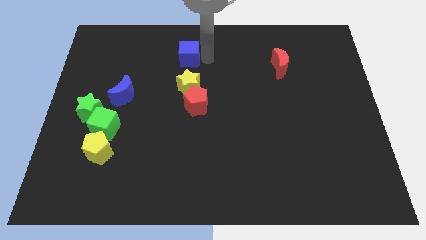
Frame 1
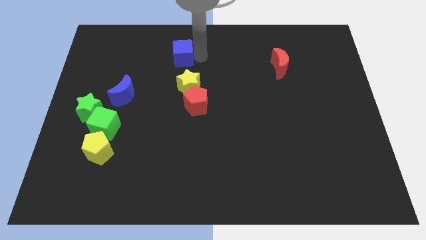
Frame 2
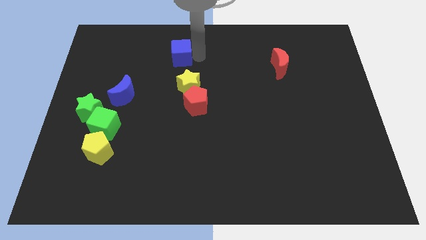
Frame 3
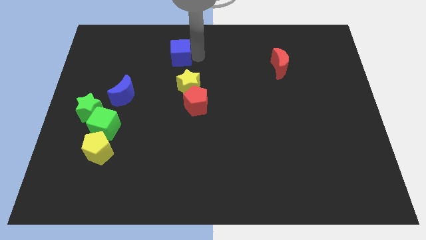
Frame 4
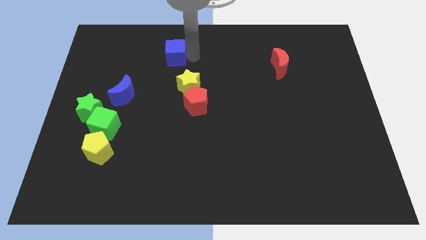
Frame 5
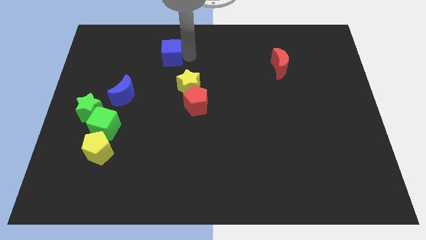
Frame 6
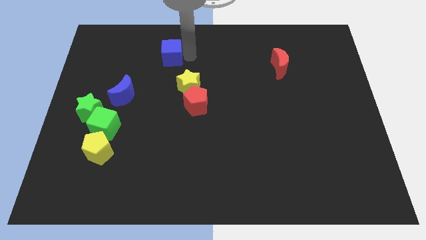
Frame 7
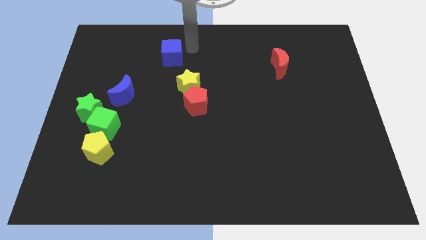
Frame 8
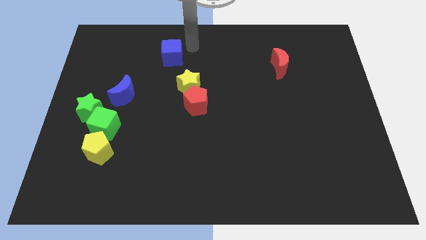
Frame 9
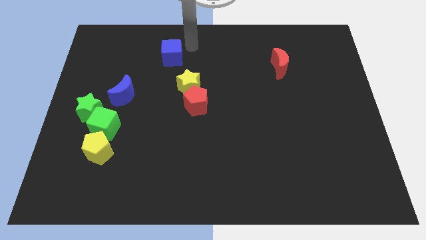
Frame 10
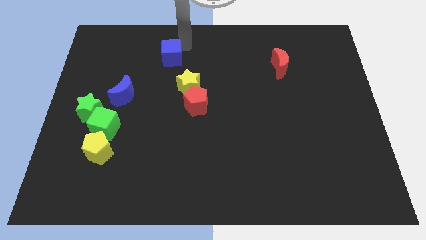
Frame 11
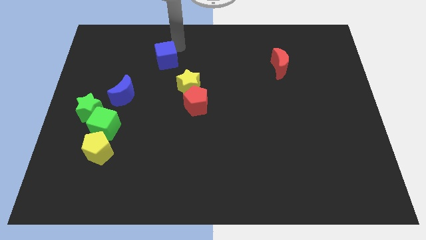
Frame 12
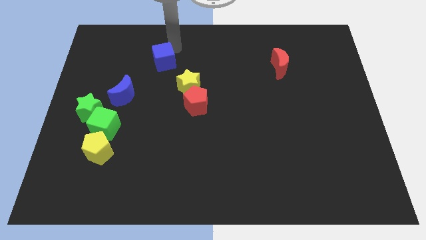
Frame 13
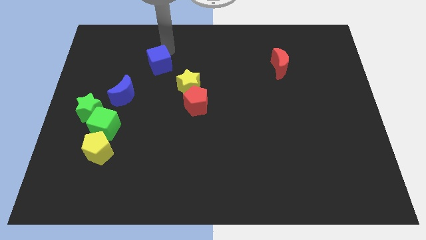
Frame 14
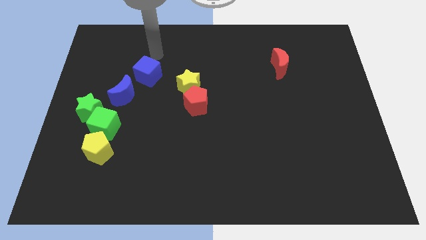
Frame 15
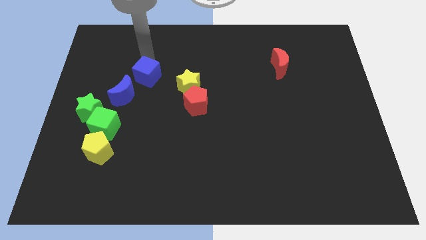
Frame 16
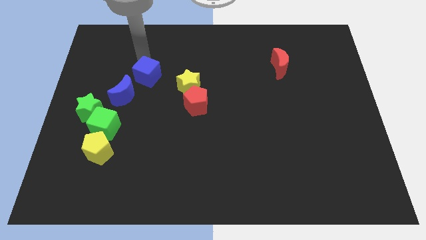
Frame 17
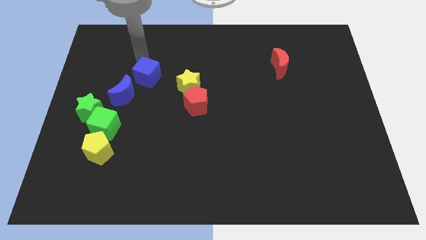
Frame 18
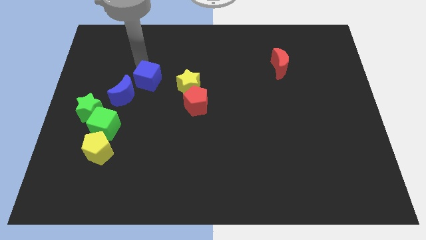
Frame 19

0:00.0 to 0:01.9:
move blue cube beside blue moon

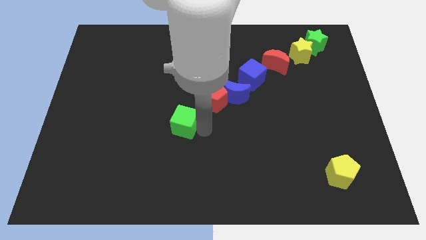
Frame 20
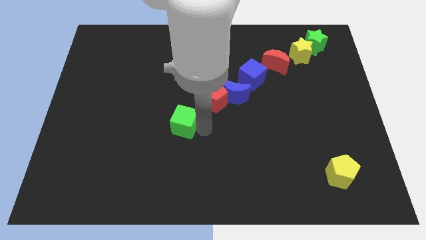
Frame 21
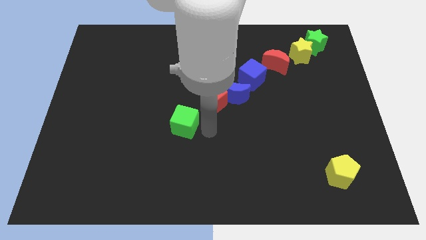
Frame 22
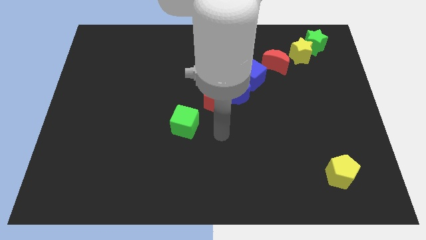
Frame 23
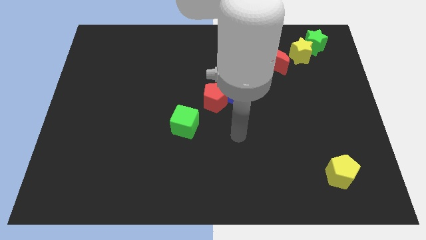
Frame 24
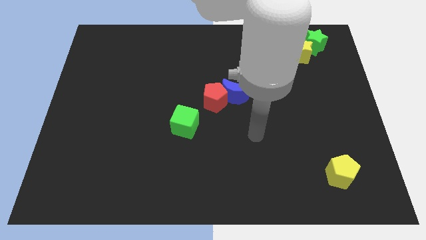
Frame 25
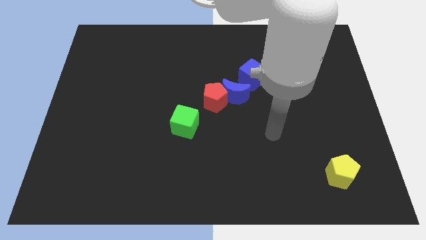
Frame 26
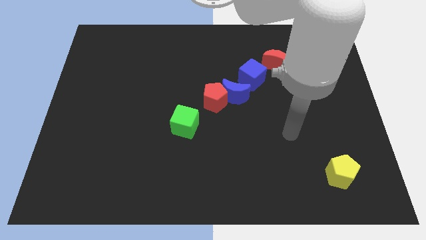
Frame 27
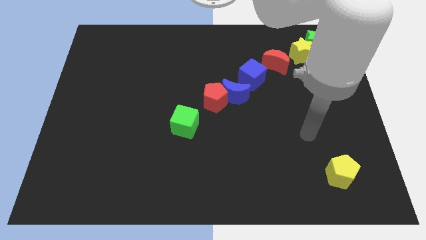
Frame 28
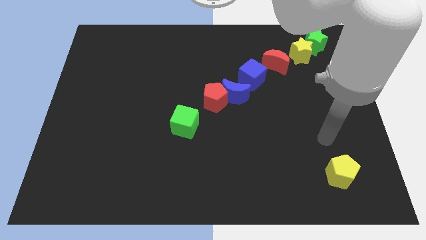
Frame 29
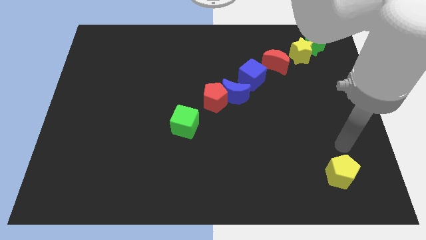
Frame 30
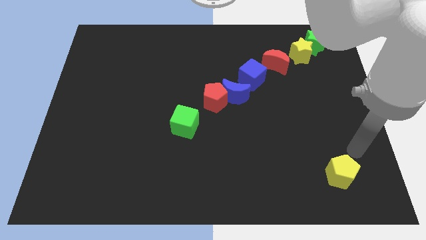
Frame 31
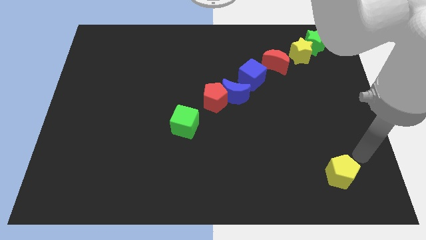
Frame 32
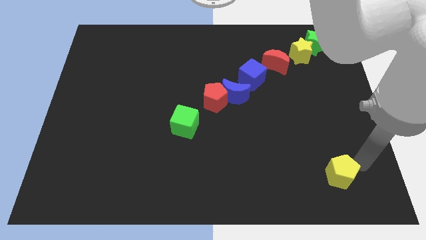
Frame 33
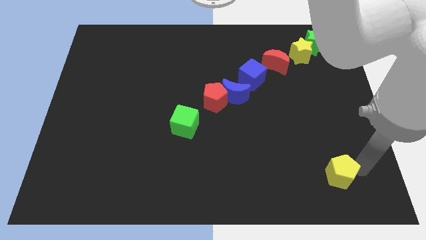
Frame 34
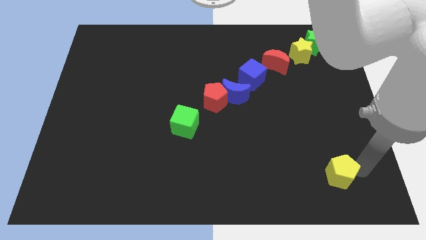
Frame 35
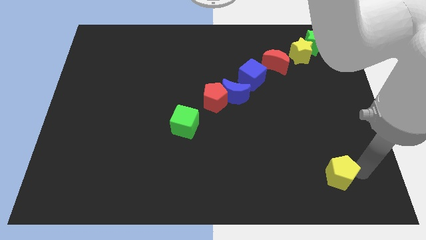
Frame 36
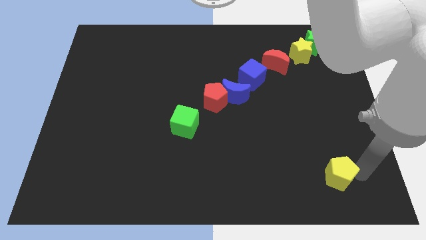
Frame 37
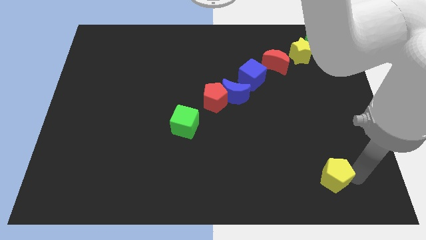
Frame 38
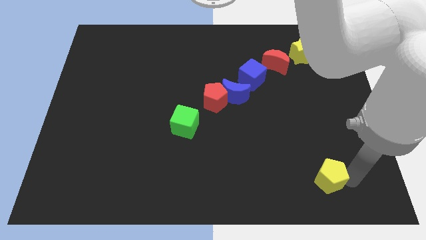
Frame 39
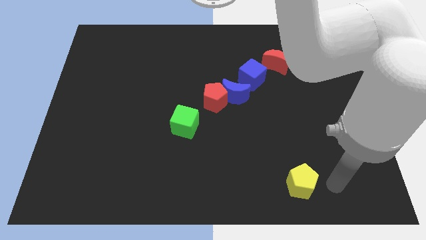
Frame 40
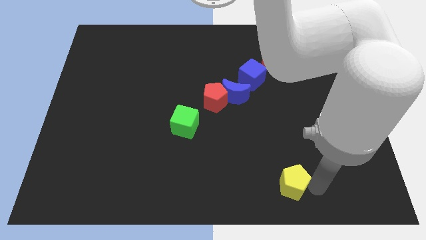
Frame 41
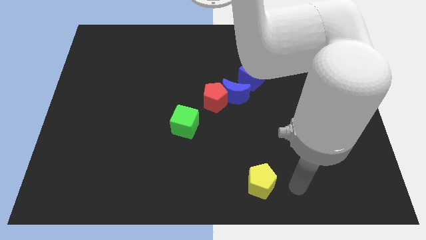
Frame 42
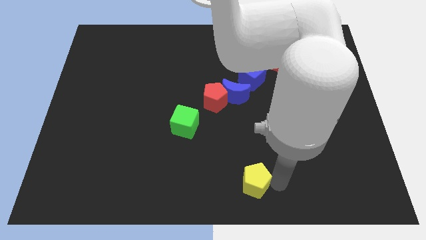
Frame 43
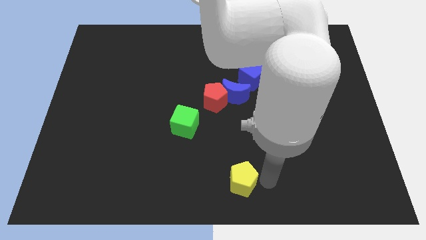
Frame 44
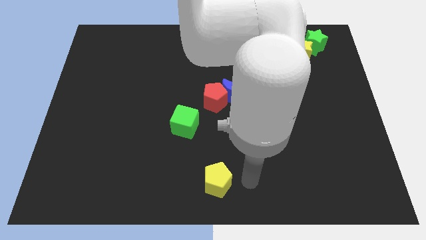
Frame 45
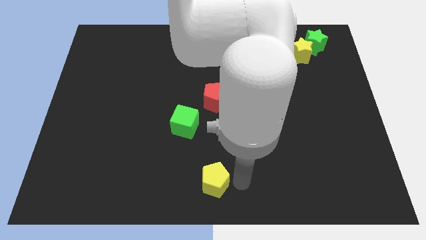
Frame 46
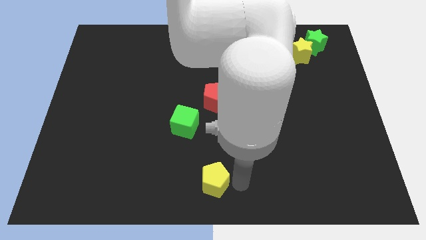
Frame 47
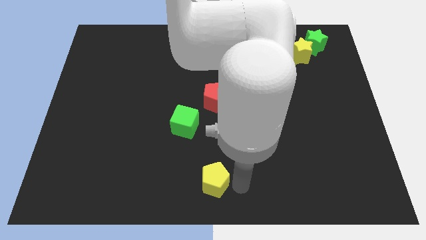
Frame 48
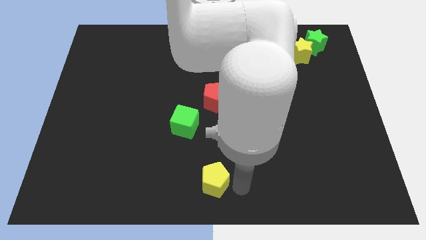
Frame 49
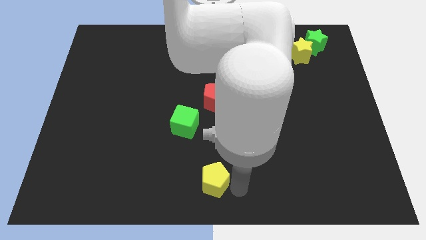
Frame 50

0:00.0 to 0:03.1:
push yellow pentagon vertical to red pentagon

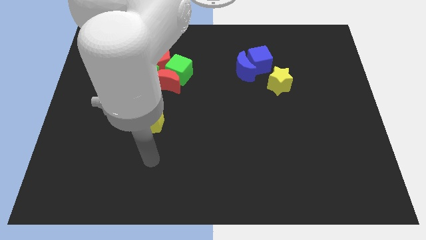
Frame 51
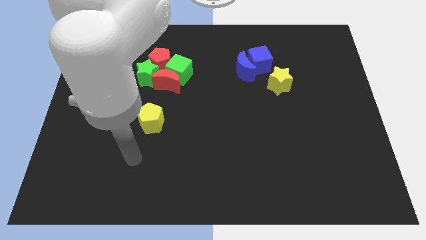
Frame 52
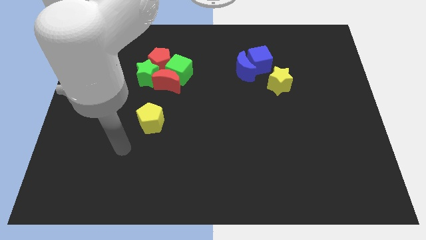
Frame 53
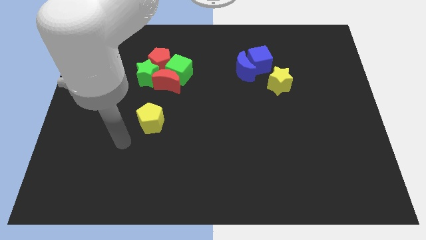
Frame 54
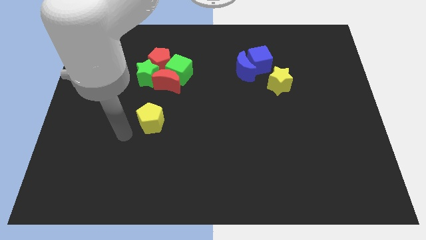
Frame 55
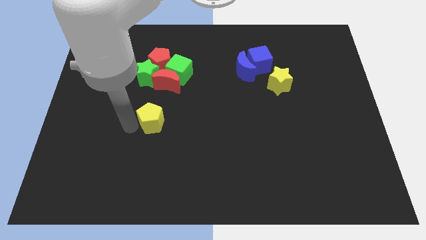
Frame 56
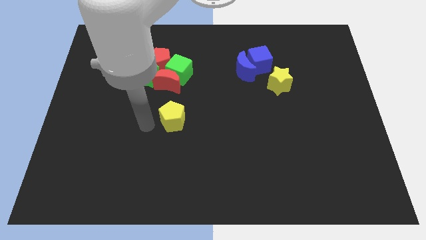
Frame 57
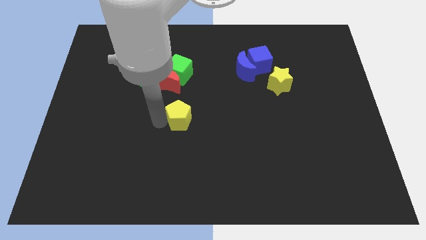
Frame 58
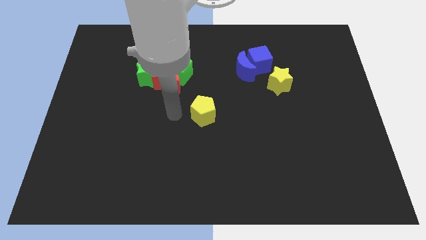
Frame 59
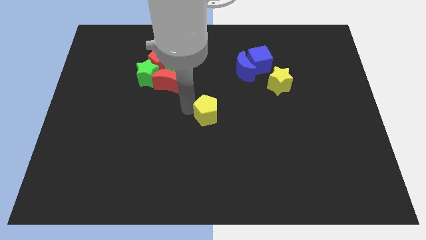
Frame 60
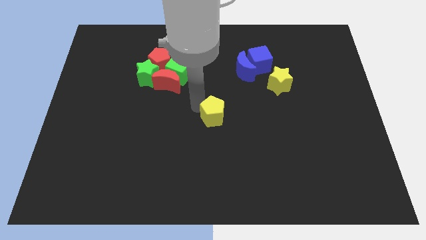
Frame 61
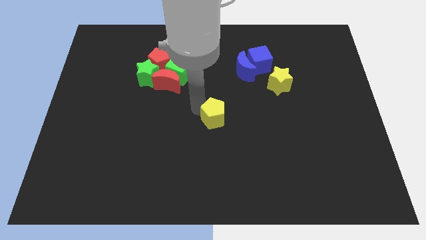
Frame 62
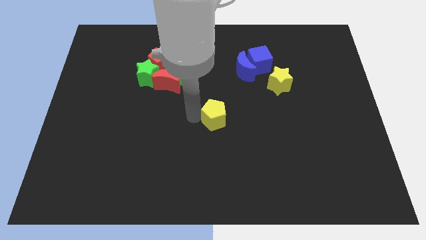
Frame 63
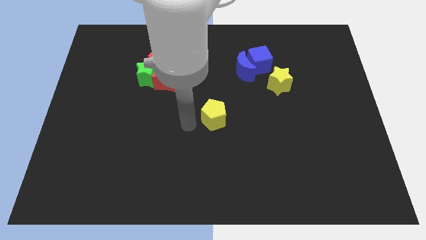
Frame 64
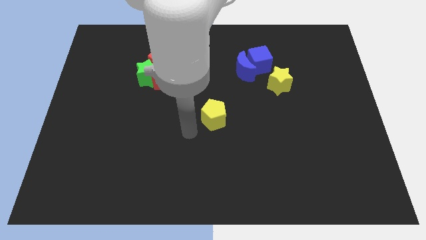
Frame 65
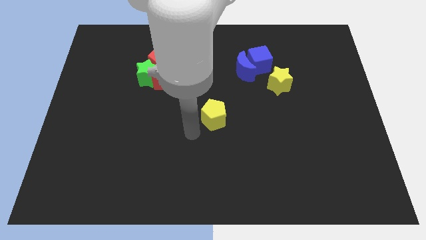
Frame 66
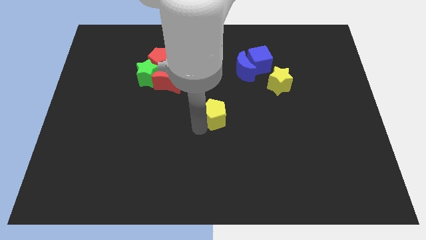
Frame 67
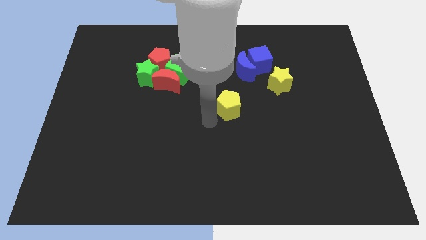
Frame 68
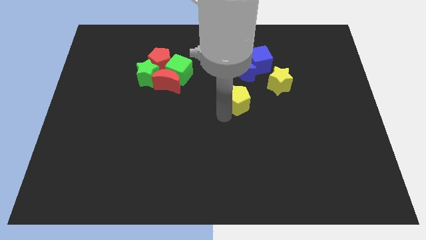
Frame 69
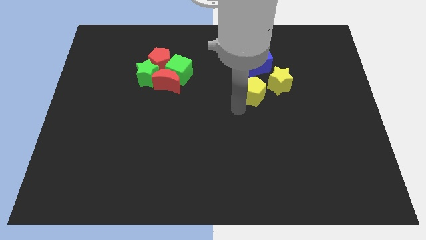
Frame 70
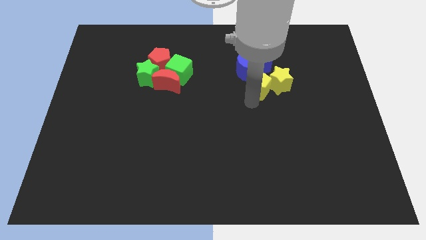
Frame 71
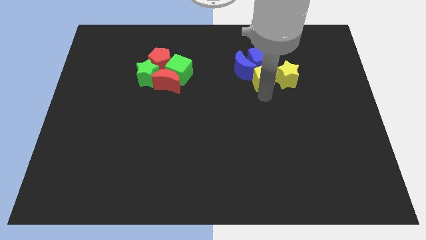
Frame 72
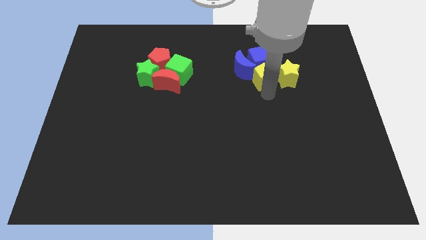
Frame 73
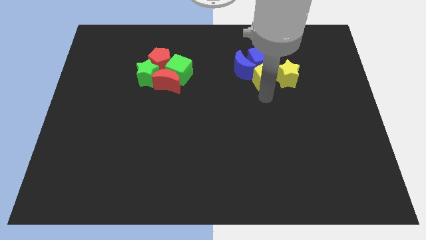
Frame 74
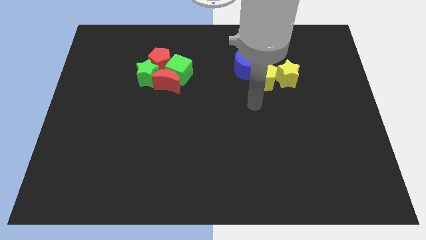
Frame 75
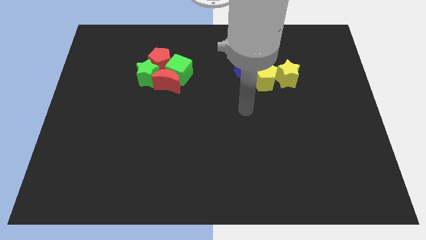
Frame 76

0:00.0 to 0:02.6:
move the yellow pentagon into the yellow star

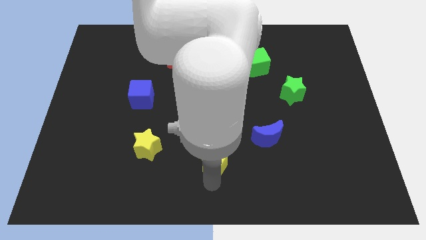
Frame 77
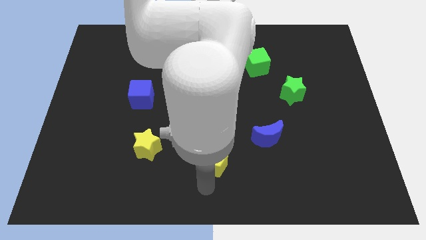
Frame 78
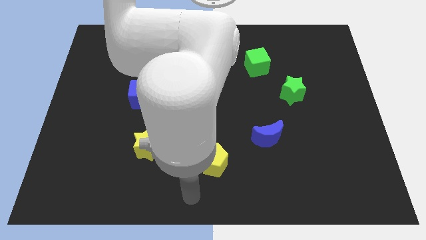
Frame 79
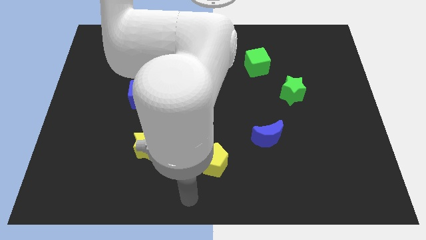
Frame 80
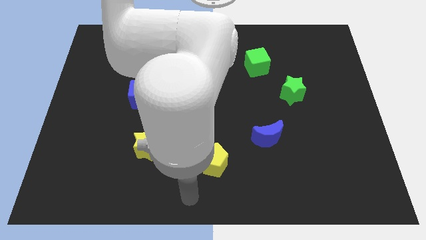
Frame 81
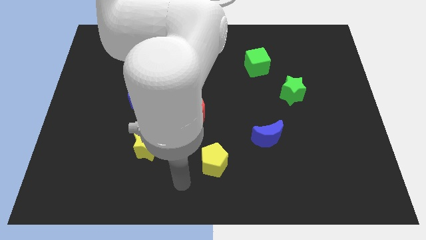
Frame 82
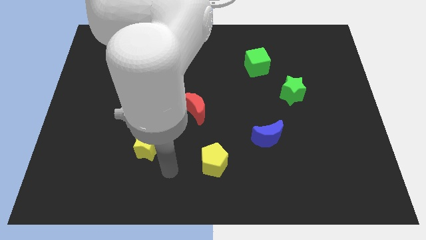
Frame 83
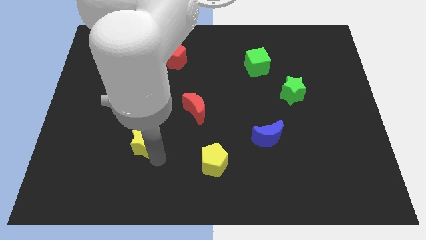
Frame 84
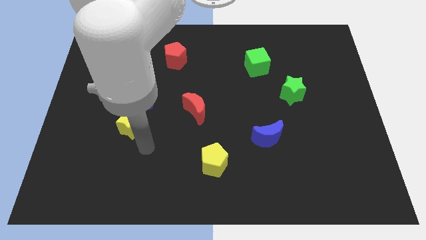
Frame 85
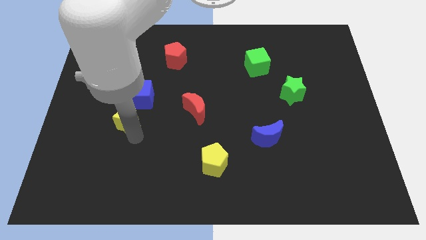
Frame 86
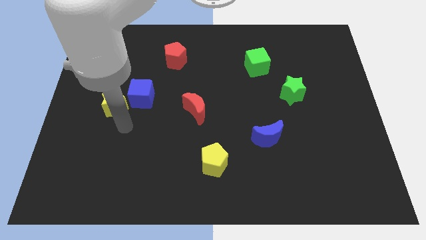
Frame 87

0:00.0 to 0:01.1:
place yellow star to the bottom left of blue cube

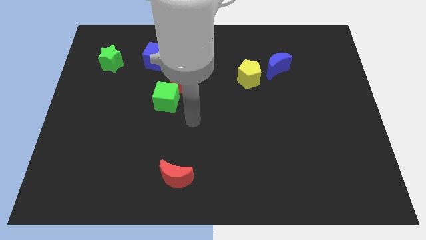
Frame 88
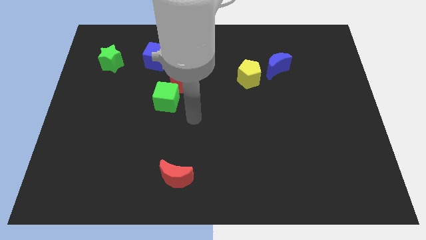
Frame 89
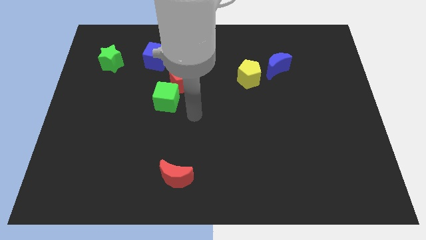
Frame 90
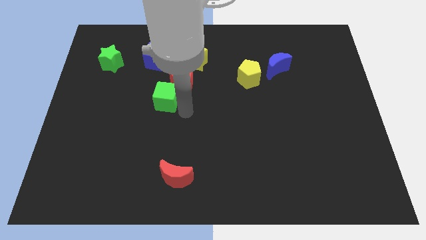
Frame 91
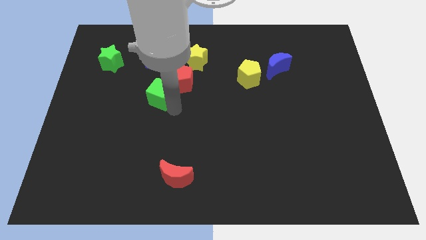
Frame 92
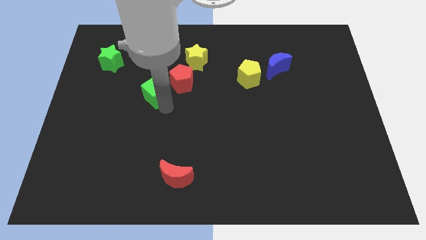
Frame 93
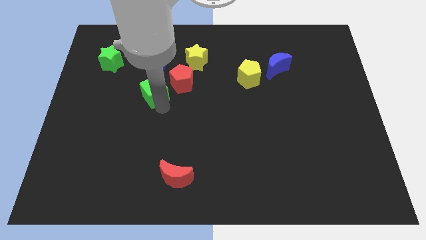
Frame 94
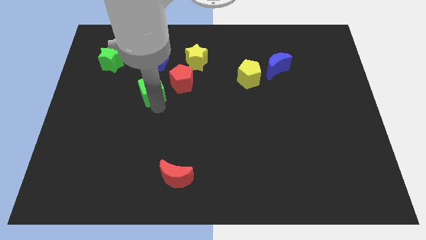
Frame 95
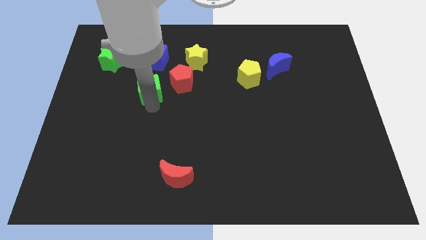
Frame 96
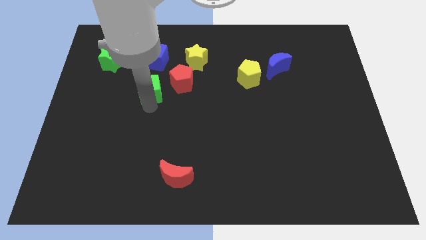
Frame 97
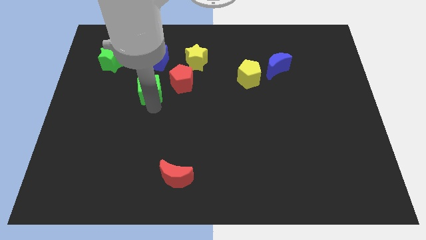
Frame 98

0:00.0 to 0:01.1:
push the green cube below the blue cube
